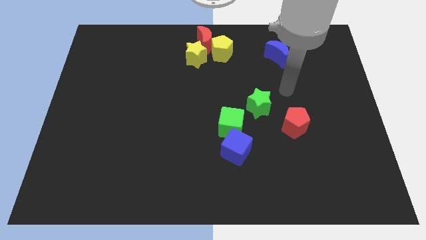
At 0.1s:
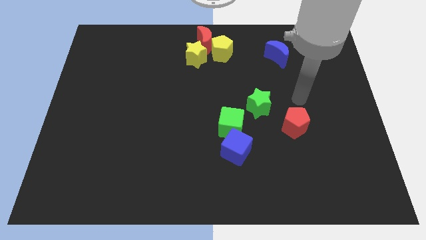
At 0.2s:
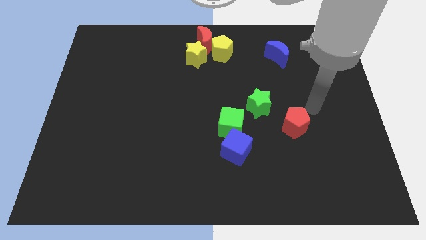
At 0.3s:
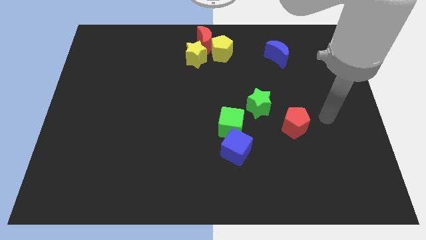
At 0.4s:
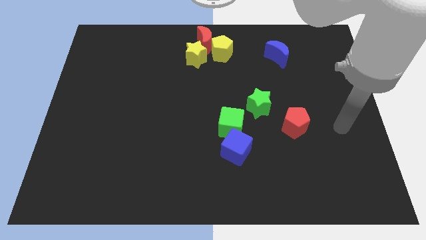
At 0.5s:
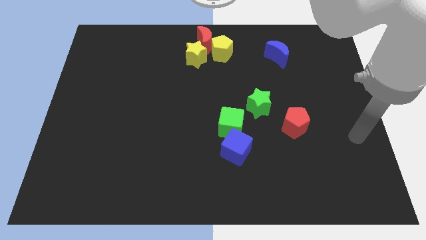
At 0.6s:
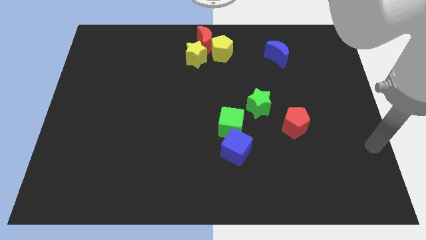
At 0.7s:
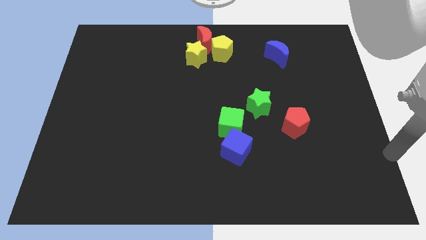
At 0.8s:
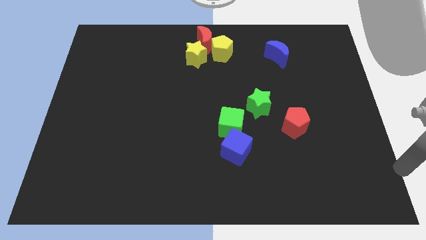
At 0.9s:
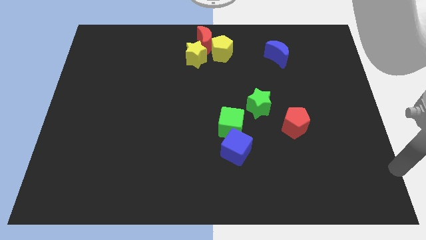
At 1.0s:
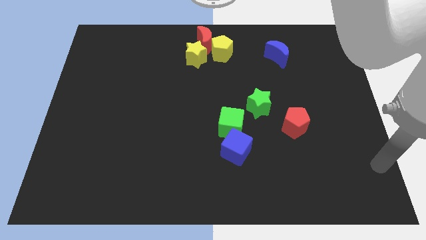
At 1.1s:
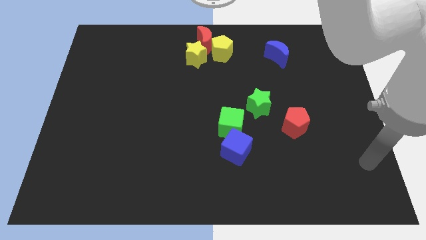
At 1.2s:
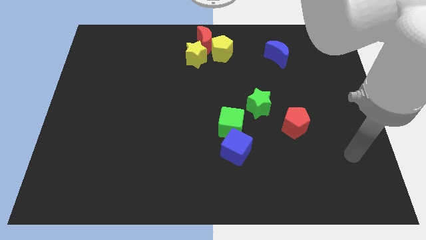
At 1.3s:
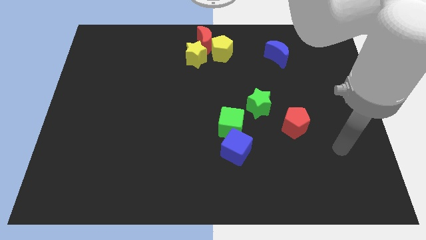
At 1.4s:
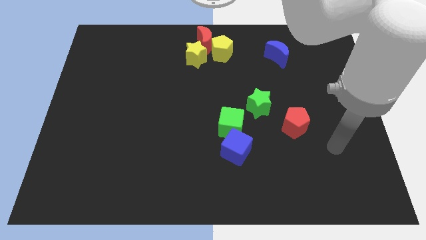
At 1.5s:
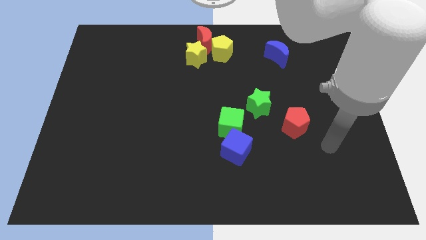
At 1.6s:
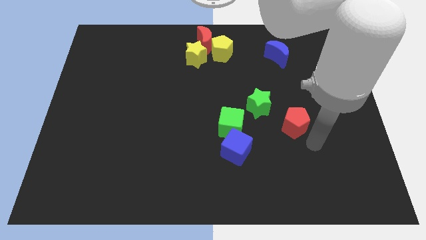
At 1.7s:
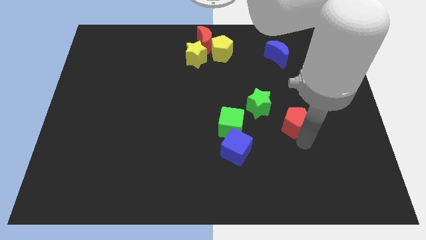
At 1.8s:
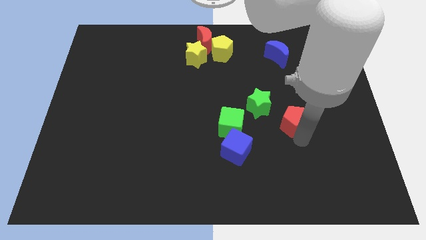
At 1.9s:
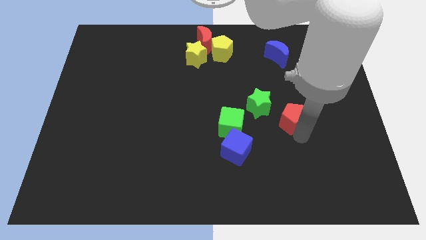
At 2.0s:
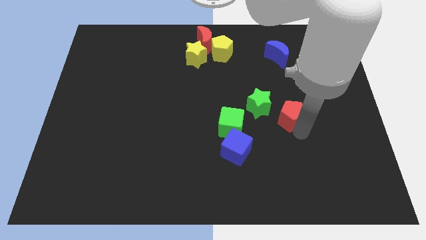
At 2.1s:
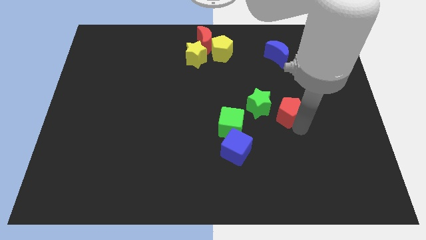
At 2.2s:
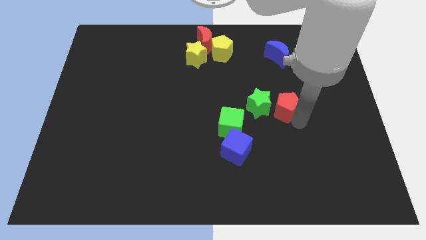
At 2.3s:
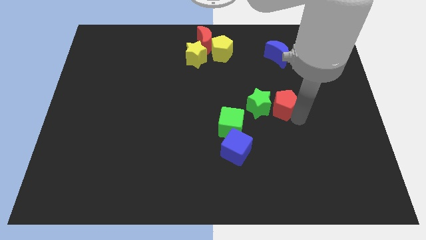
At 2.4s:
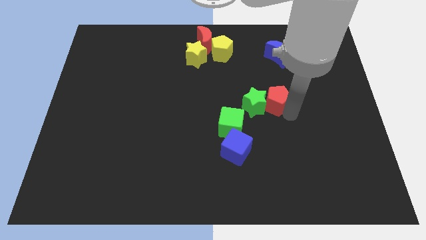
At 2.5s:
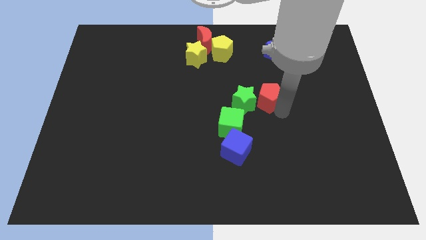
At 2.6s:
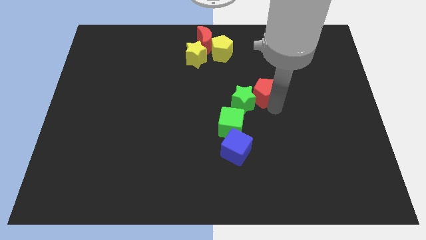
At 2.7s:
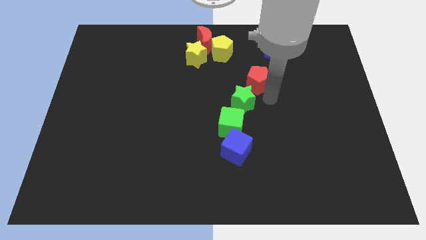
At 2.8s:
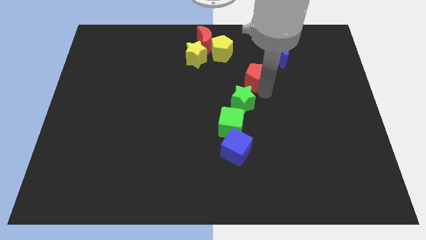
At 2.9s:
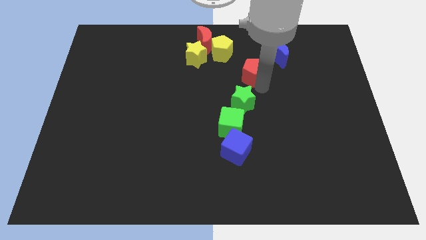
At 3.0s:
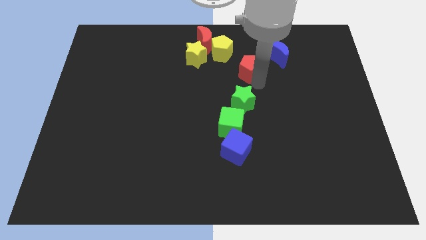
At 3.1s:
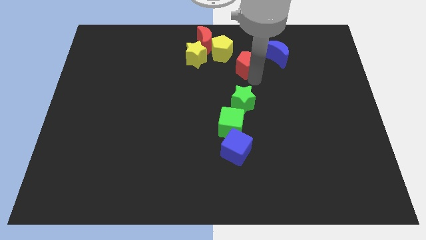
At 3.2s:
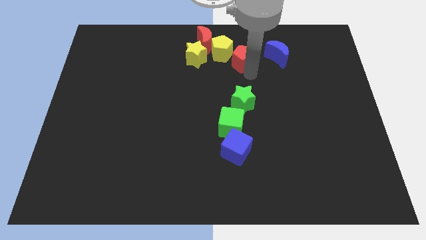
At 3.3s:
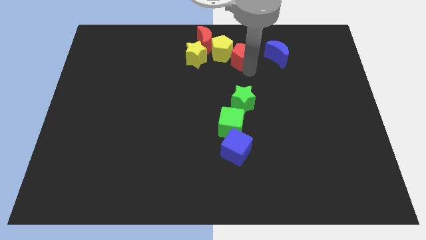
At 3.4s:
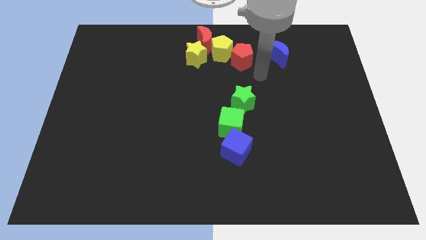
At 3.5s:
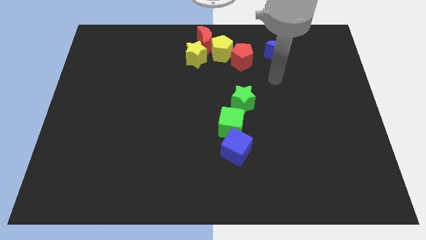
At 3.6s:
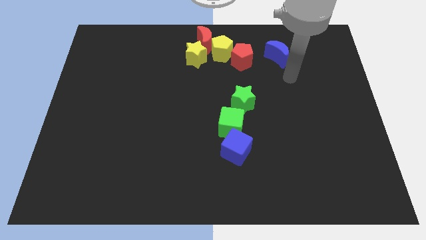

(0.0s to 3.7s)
place the red pentagon in between the blue moon and yellow pentagon

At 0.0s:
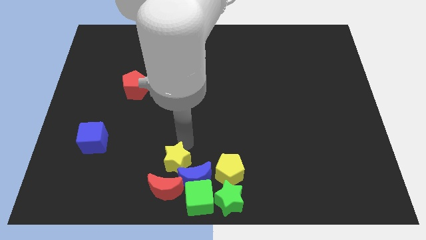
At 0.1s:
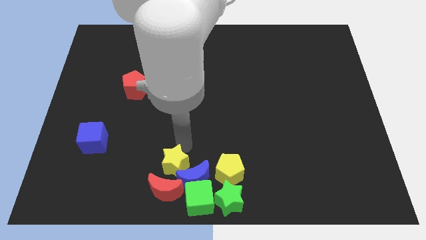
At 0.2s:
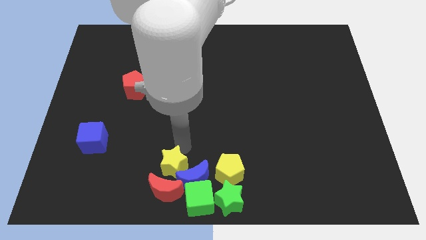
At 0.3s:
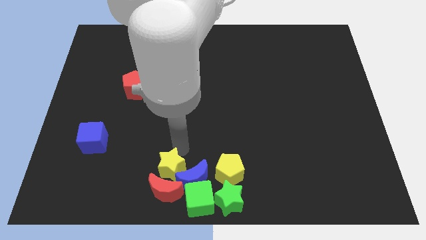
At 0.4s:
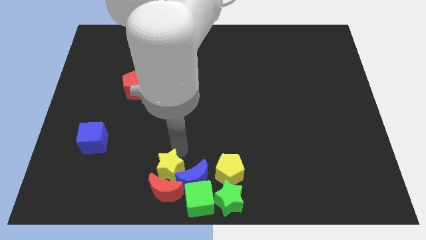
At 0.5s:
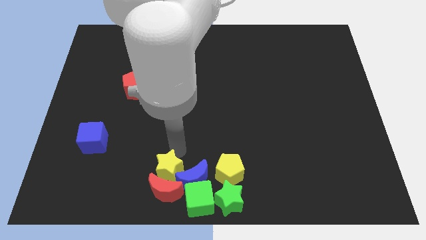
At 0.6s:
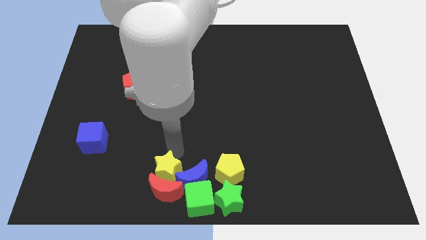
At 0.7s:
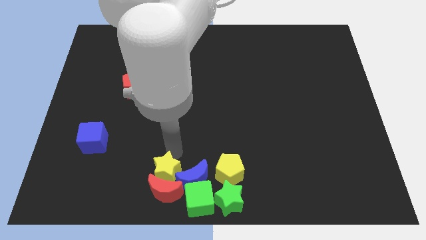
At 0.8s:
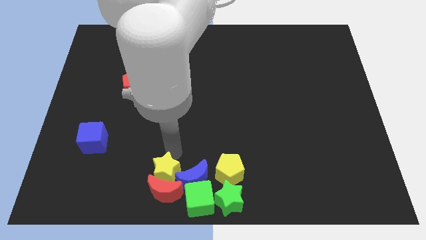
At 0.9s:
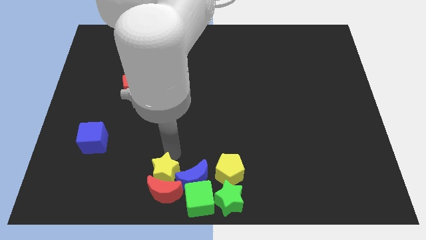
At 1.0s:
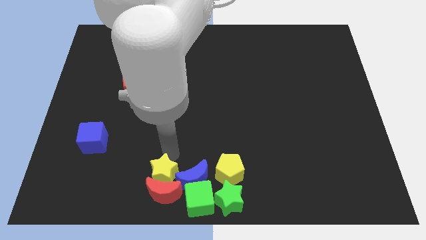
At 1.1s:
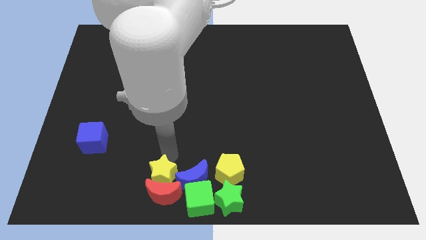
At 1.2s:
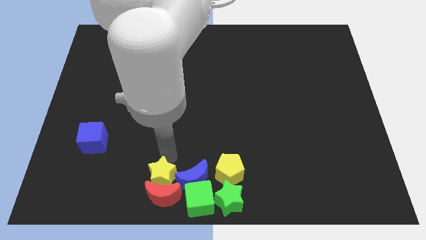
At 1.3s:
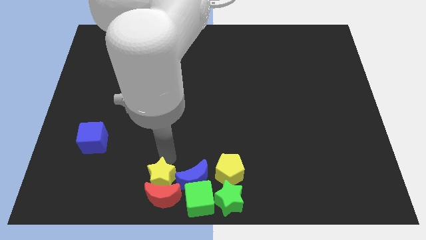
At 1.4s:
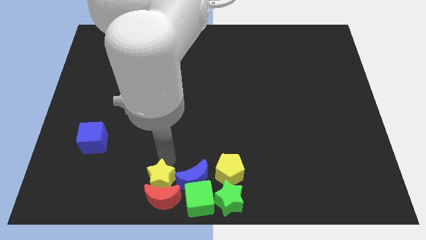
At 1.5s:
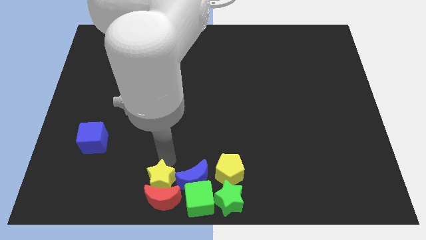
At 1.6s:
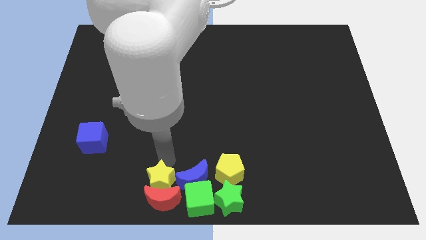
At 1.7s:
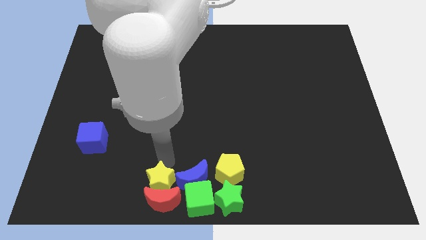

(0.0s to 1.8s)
move the yellow star into the red crescent

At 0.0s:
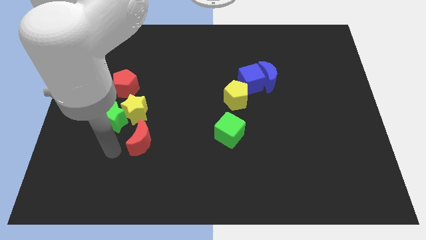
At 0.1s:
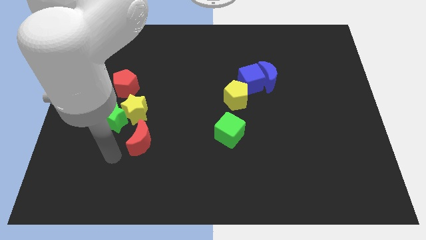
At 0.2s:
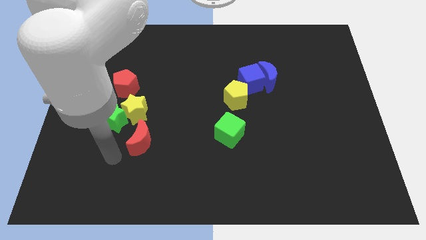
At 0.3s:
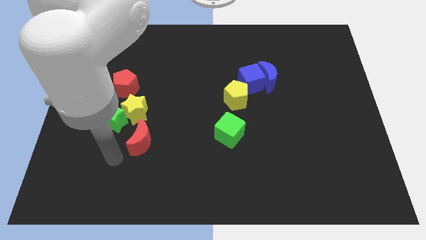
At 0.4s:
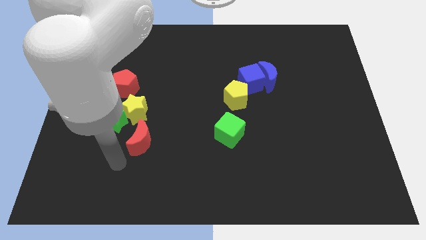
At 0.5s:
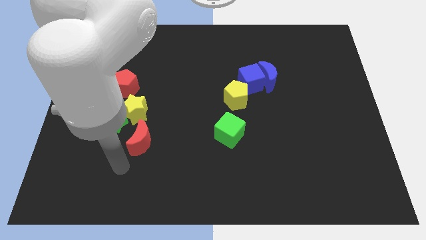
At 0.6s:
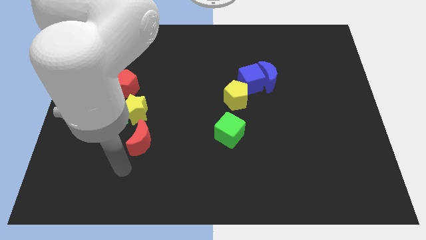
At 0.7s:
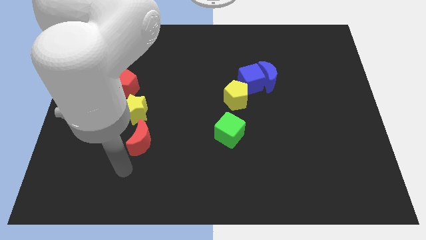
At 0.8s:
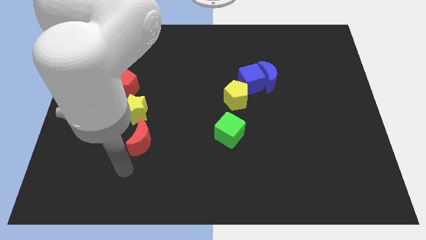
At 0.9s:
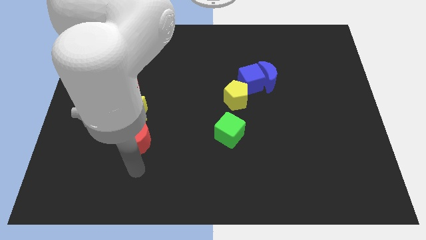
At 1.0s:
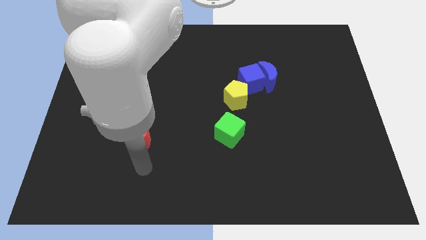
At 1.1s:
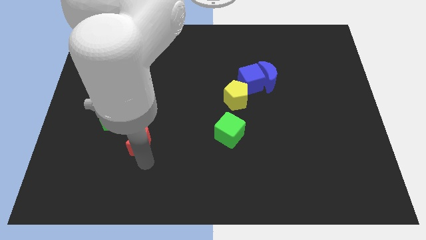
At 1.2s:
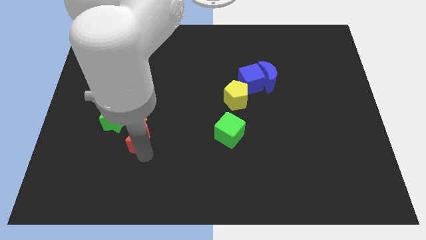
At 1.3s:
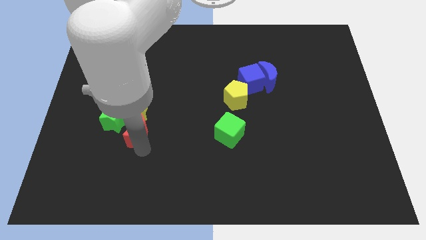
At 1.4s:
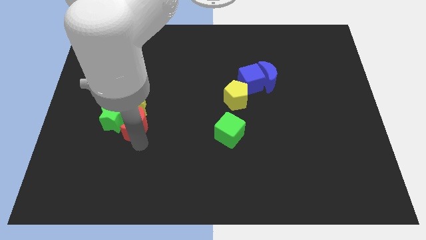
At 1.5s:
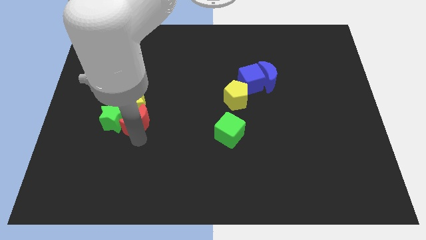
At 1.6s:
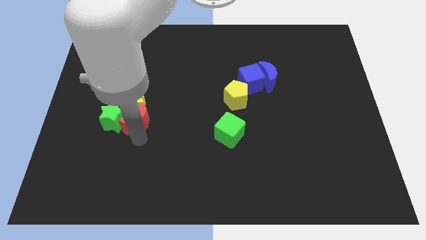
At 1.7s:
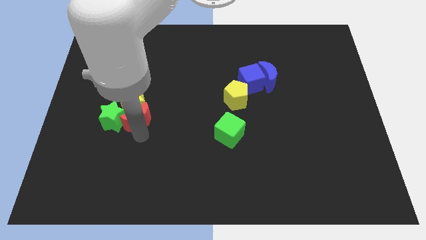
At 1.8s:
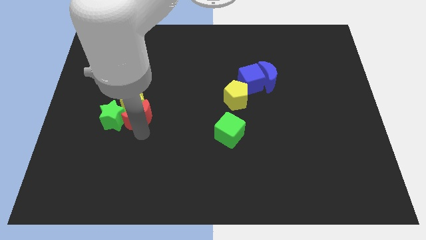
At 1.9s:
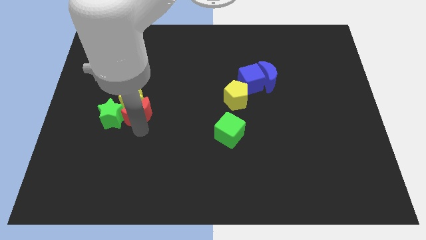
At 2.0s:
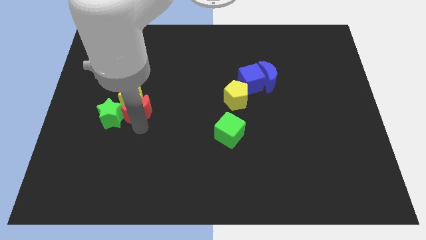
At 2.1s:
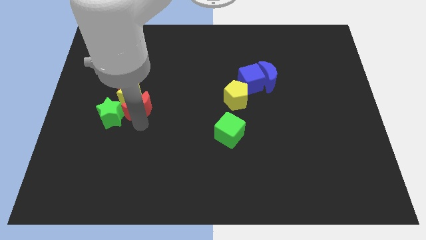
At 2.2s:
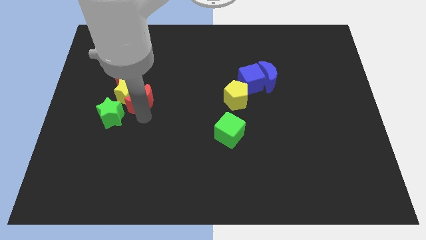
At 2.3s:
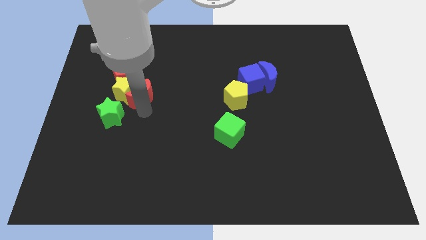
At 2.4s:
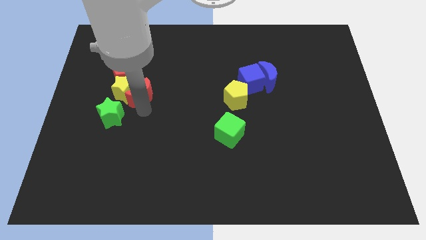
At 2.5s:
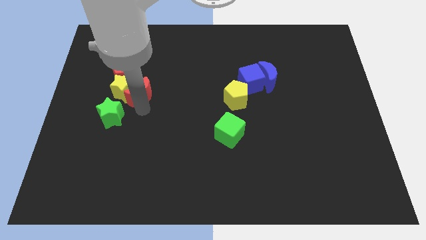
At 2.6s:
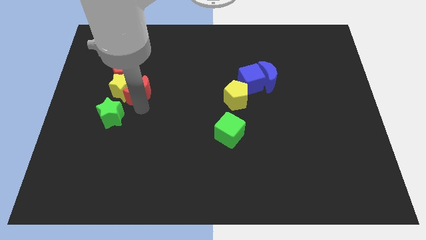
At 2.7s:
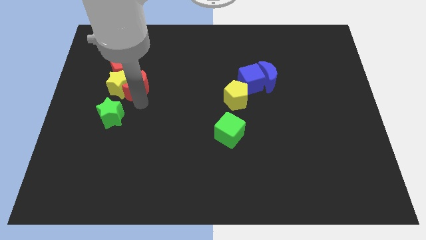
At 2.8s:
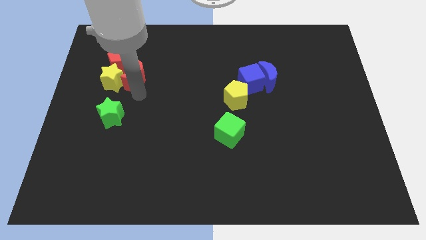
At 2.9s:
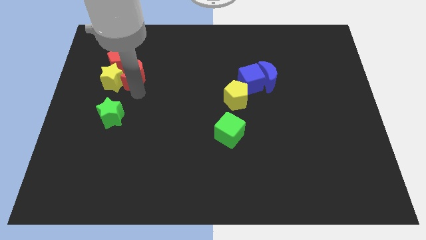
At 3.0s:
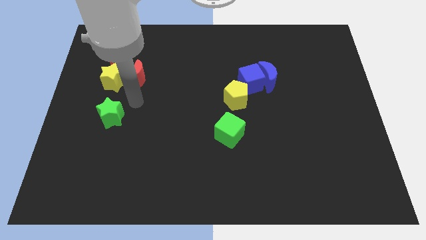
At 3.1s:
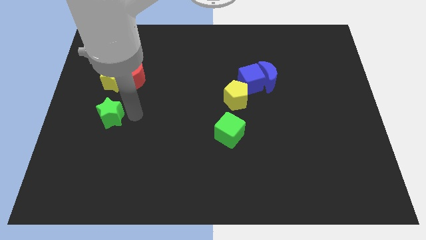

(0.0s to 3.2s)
push red moon into red pentagon

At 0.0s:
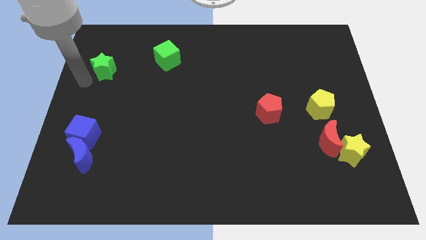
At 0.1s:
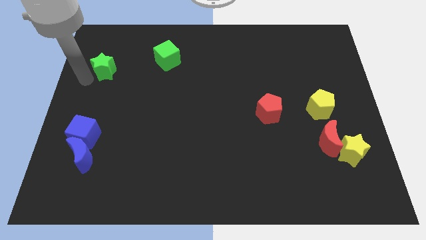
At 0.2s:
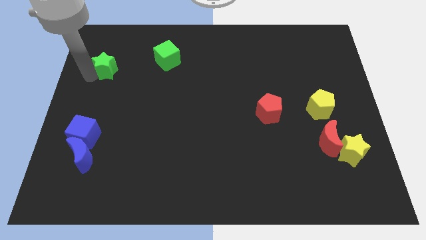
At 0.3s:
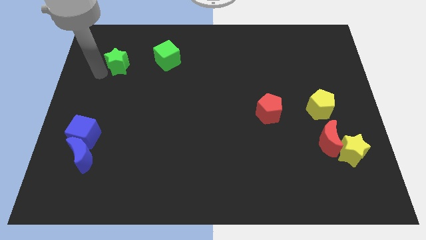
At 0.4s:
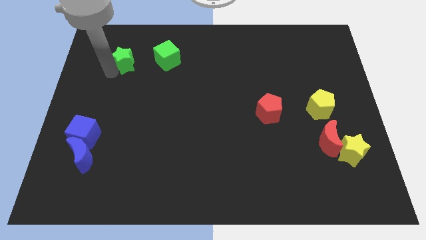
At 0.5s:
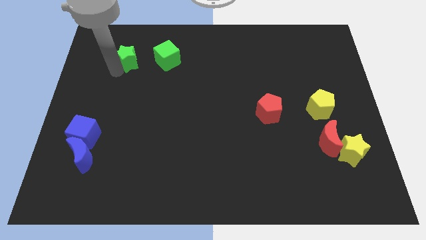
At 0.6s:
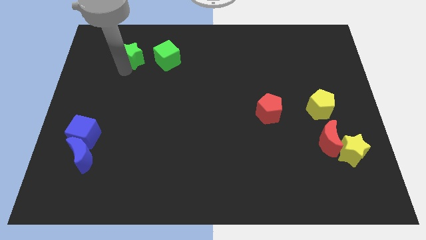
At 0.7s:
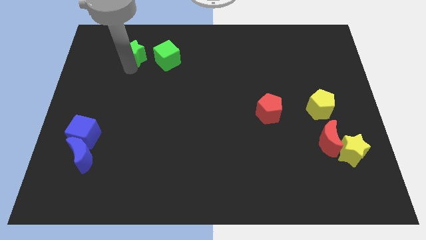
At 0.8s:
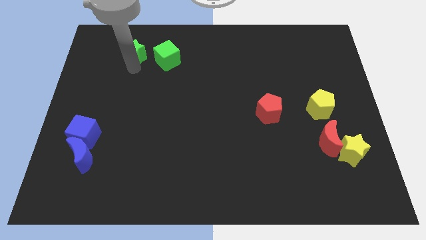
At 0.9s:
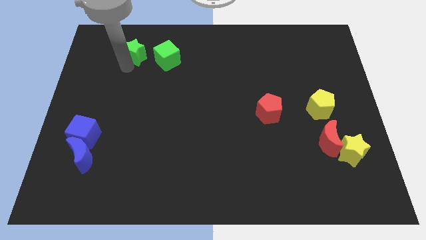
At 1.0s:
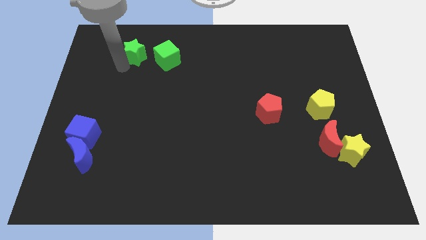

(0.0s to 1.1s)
move green star left beside the green cube
